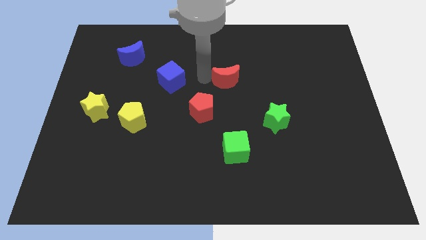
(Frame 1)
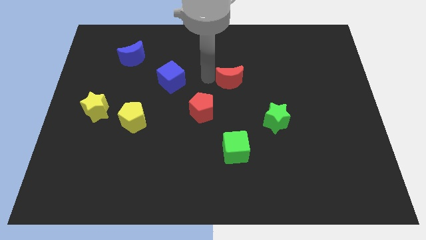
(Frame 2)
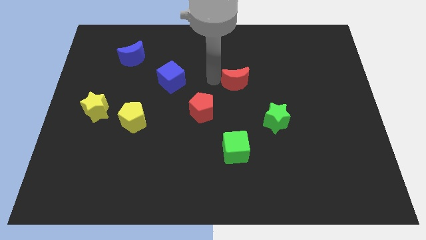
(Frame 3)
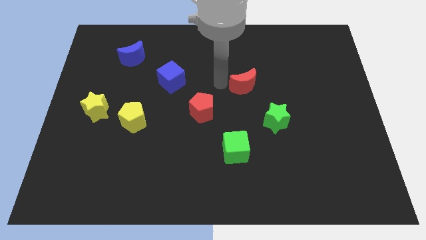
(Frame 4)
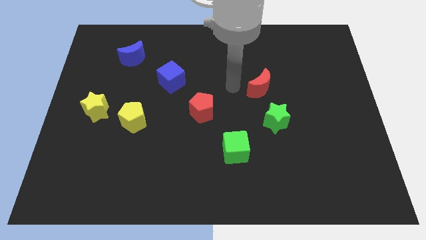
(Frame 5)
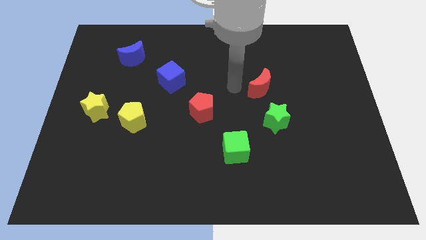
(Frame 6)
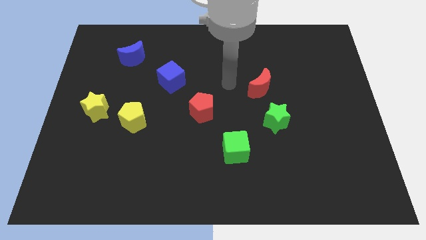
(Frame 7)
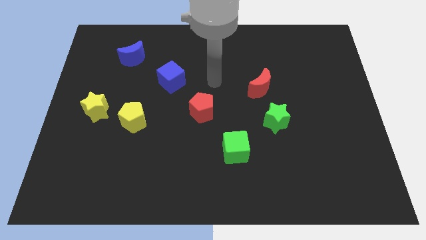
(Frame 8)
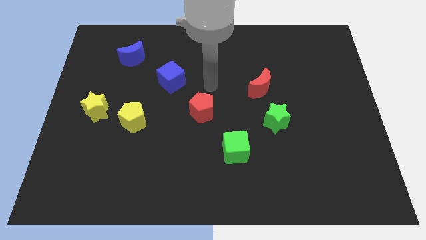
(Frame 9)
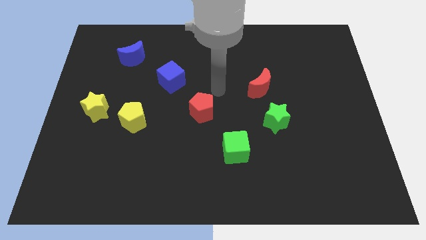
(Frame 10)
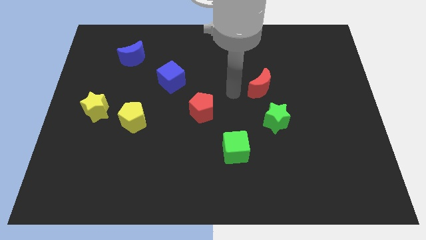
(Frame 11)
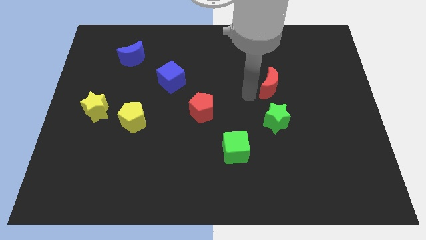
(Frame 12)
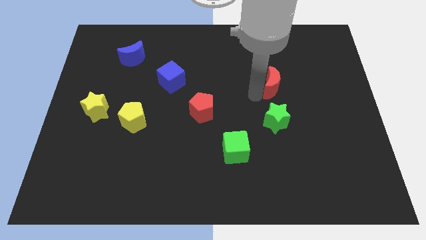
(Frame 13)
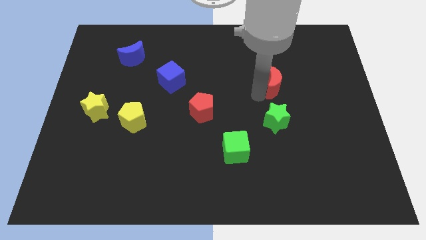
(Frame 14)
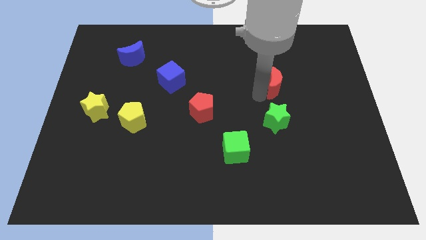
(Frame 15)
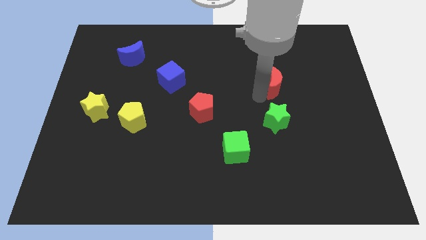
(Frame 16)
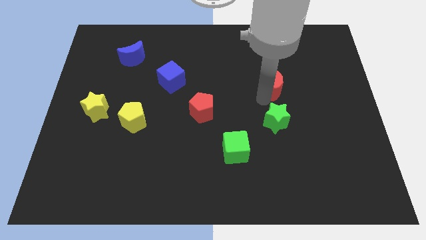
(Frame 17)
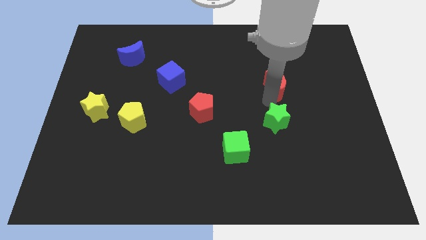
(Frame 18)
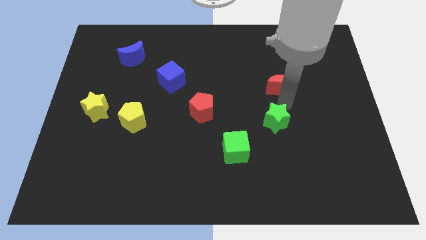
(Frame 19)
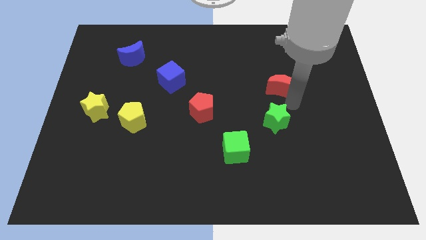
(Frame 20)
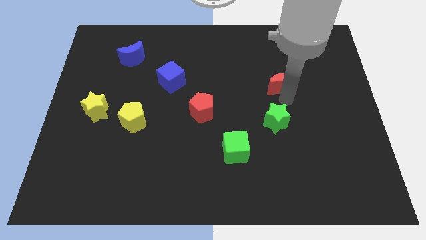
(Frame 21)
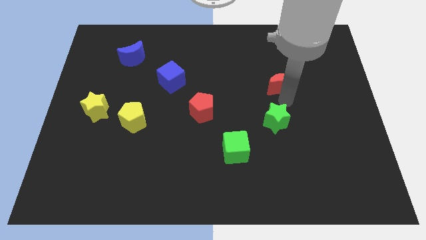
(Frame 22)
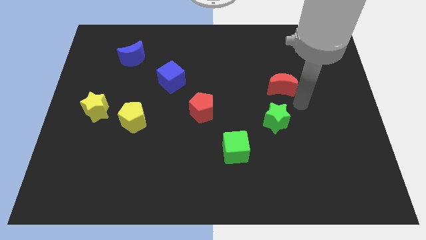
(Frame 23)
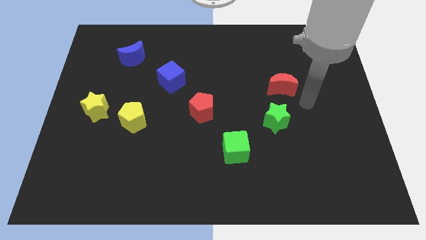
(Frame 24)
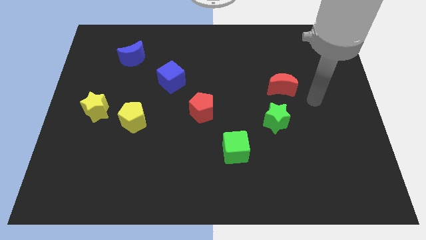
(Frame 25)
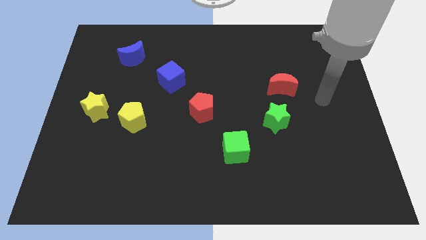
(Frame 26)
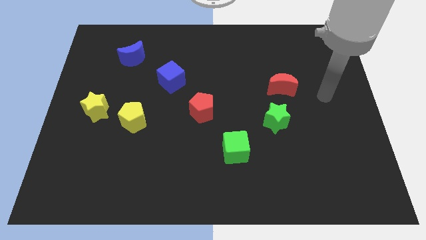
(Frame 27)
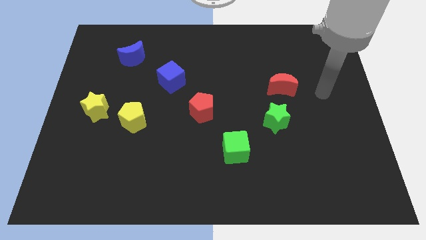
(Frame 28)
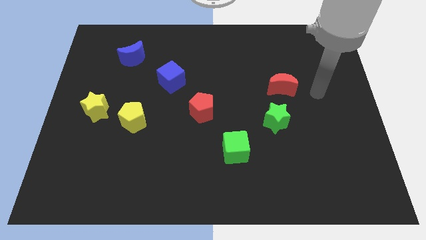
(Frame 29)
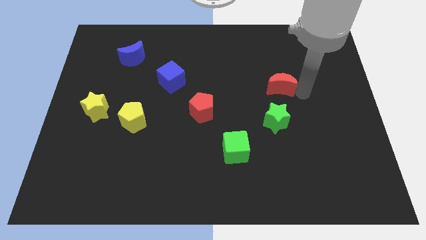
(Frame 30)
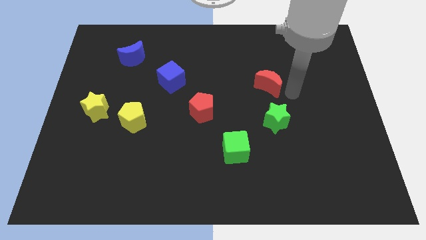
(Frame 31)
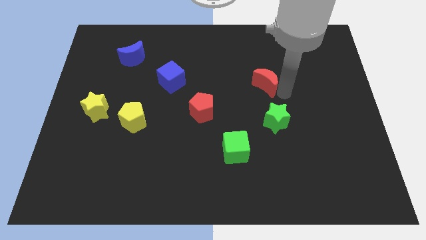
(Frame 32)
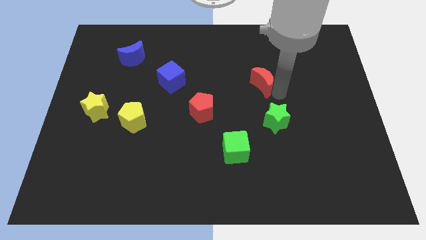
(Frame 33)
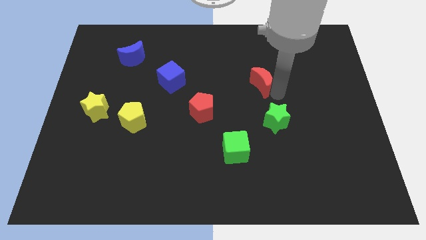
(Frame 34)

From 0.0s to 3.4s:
place the red crescent on top of green star

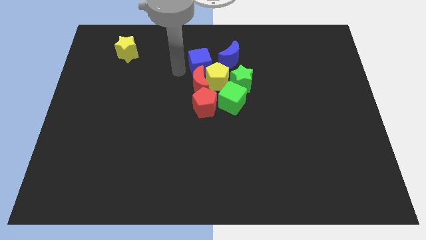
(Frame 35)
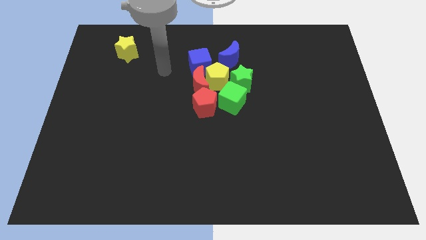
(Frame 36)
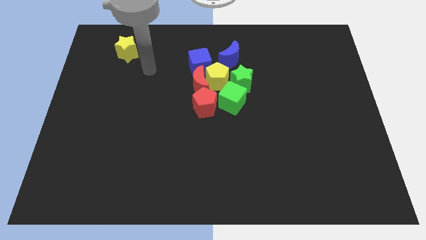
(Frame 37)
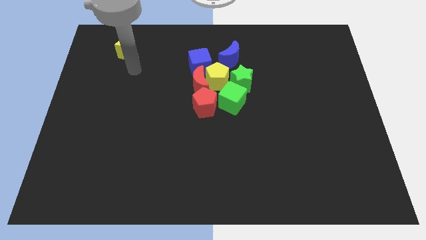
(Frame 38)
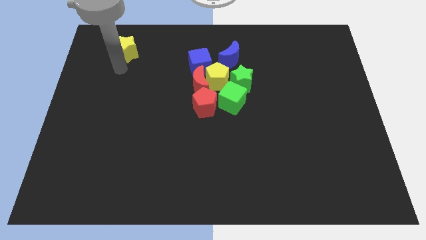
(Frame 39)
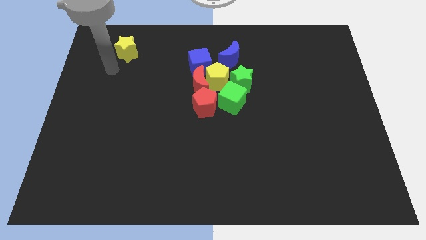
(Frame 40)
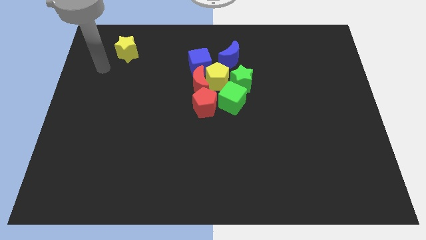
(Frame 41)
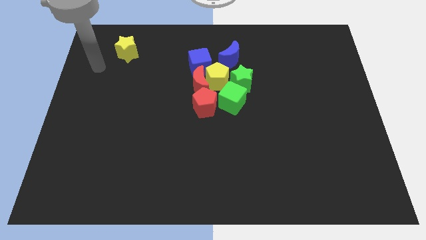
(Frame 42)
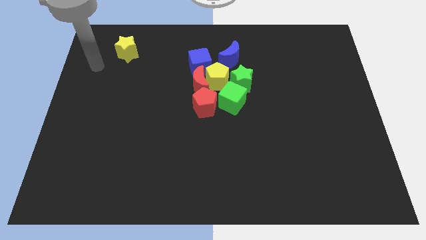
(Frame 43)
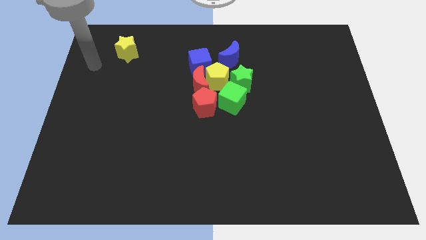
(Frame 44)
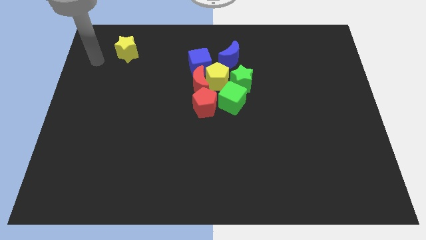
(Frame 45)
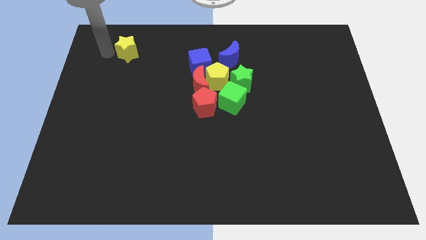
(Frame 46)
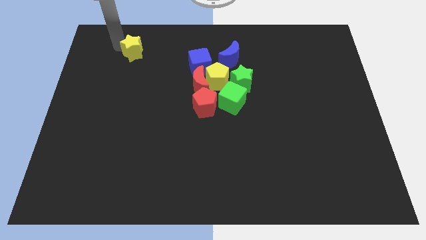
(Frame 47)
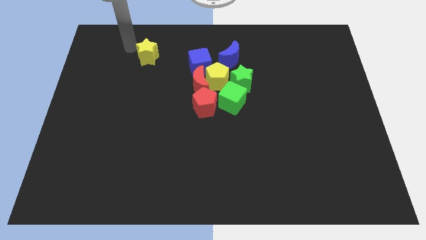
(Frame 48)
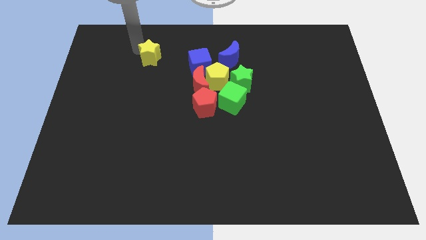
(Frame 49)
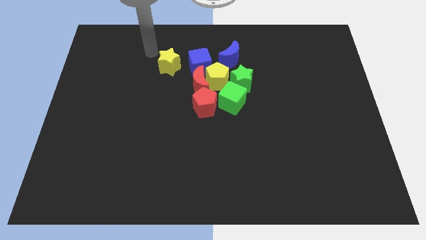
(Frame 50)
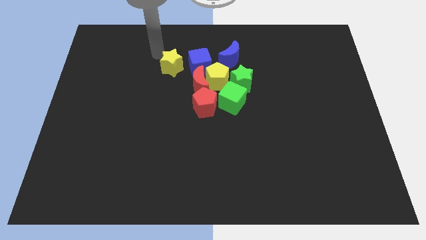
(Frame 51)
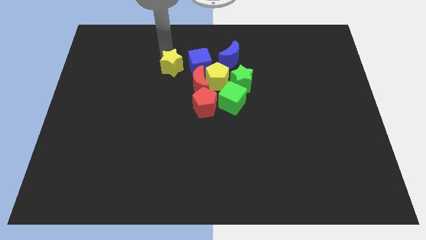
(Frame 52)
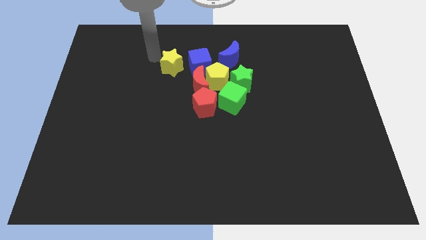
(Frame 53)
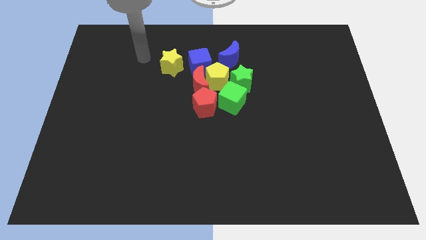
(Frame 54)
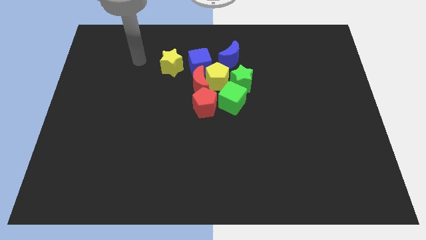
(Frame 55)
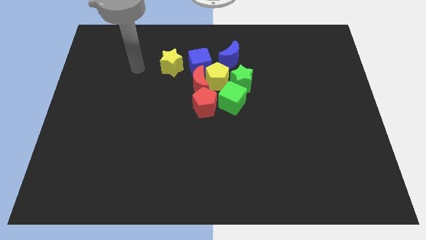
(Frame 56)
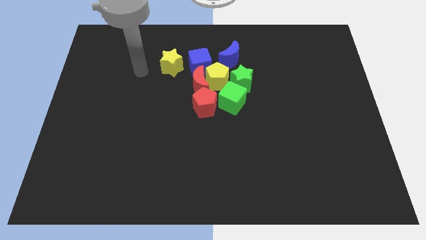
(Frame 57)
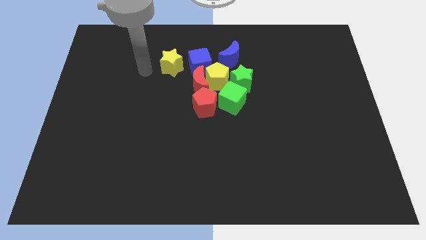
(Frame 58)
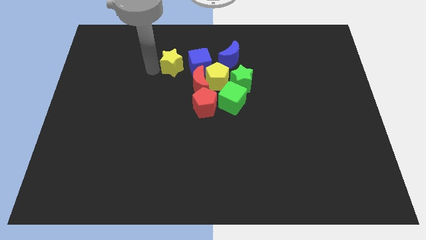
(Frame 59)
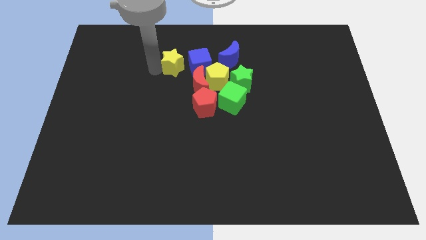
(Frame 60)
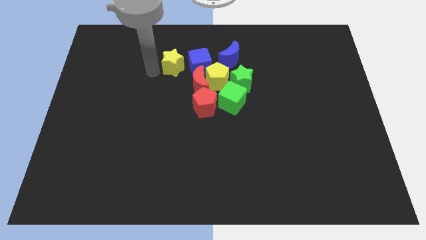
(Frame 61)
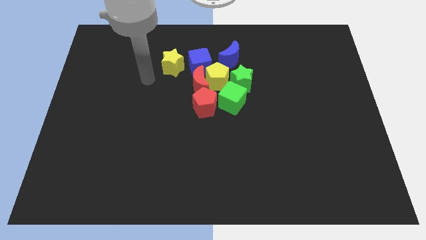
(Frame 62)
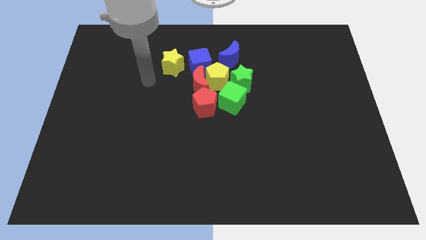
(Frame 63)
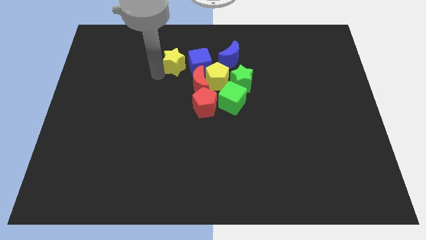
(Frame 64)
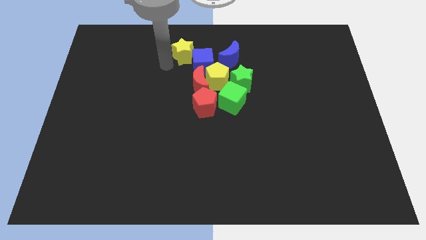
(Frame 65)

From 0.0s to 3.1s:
slide the yellow star into the top left side of the blue cube

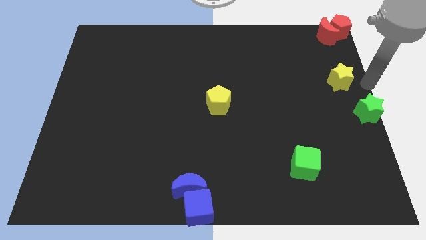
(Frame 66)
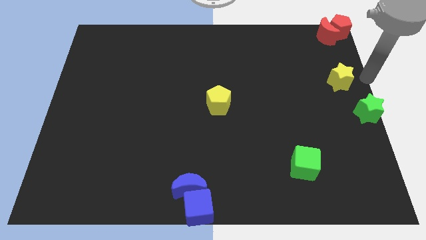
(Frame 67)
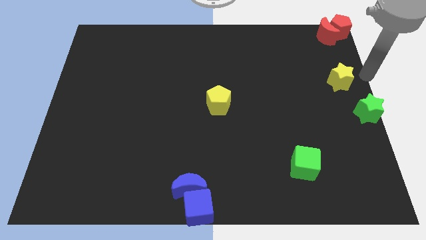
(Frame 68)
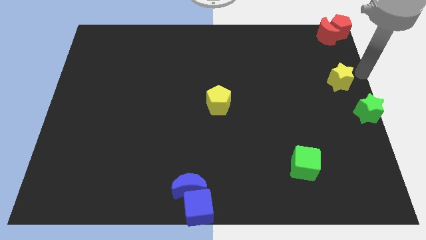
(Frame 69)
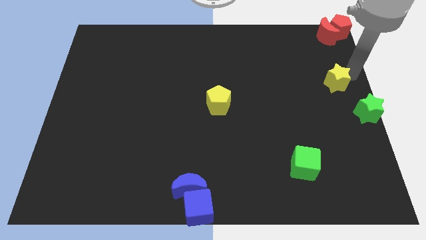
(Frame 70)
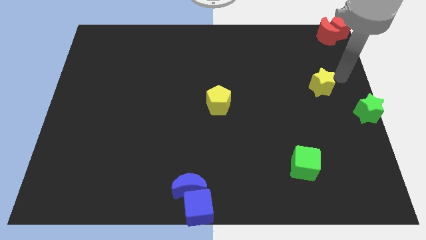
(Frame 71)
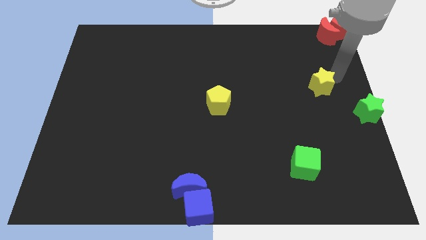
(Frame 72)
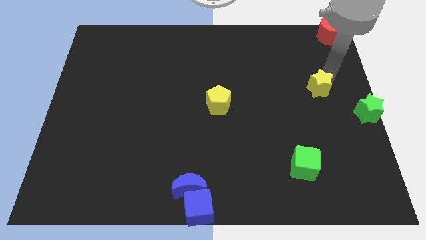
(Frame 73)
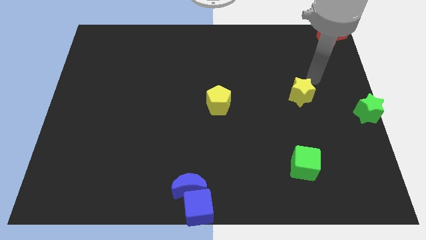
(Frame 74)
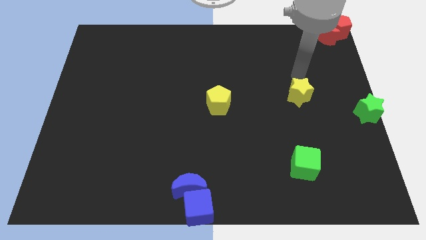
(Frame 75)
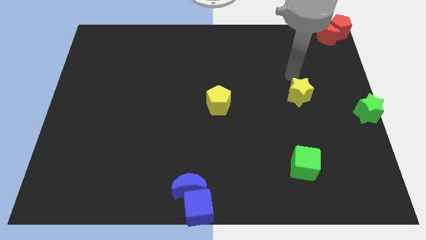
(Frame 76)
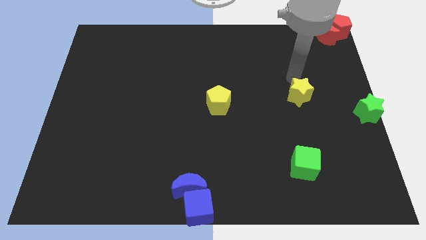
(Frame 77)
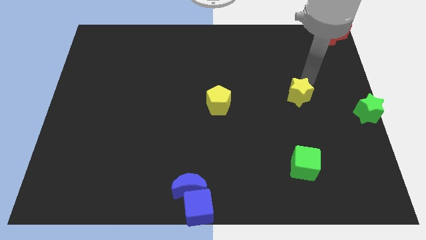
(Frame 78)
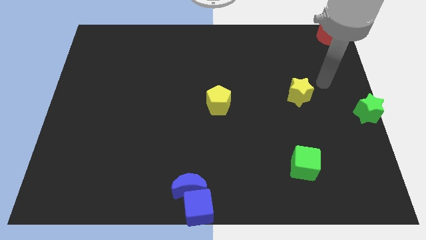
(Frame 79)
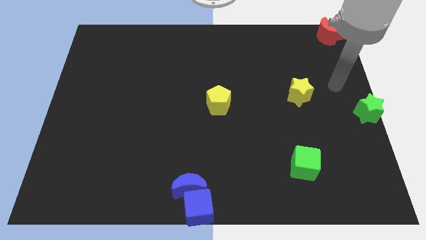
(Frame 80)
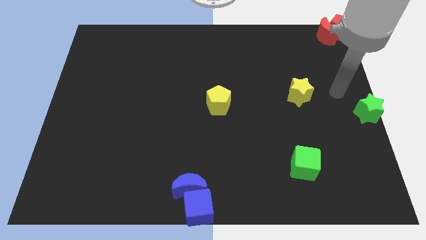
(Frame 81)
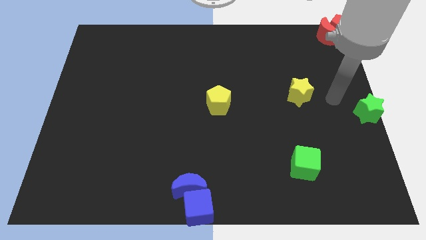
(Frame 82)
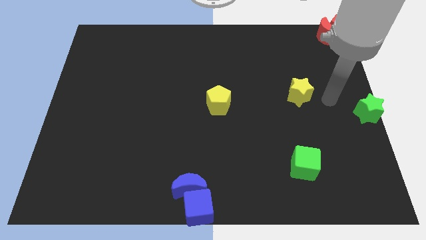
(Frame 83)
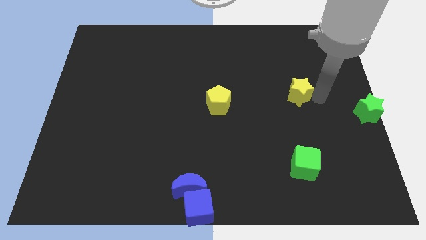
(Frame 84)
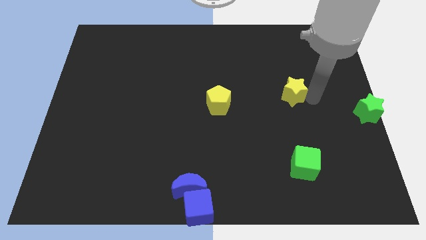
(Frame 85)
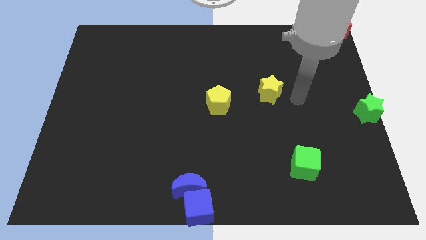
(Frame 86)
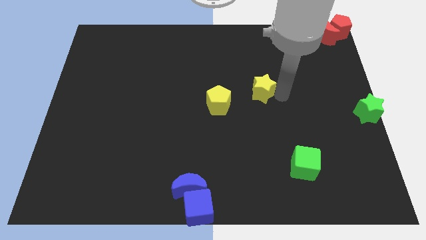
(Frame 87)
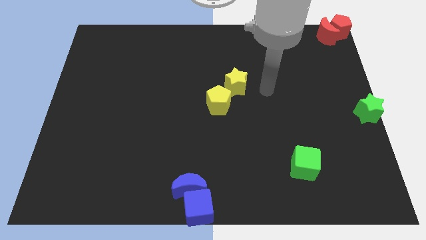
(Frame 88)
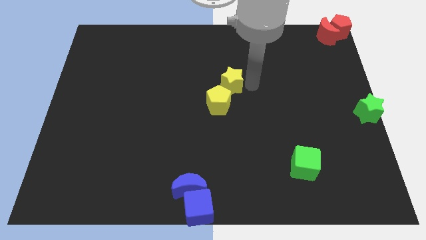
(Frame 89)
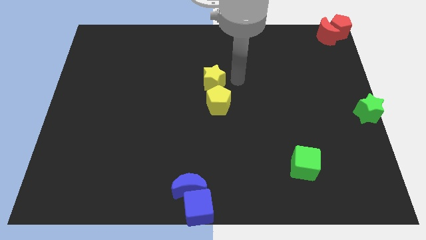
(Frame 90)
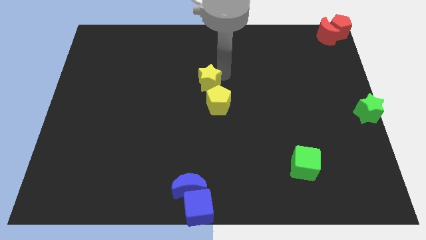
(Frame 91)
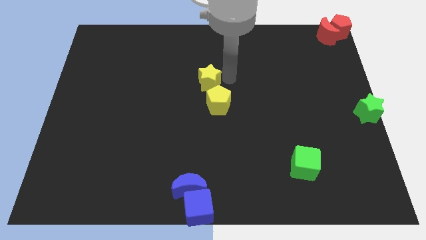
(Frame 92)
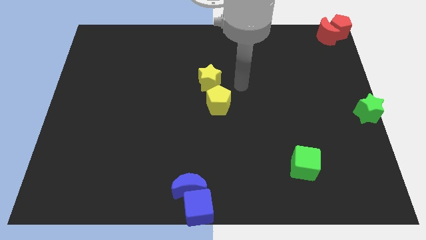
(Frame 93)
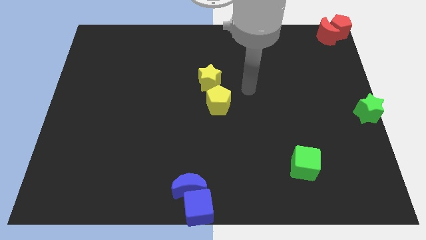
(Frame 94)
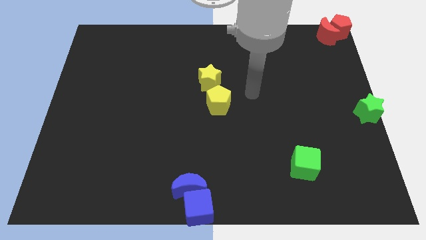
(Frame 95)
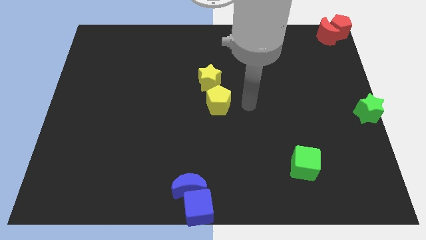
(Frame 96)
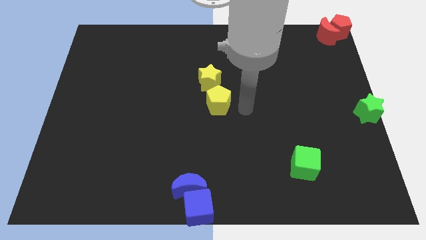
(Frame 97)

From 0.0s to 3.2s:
move yellow star on top of yellow pentagon
